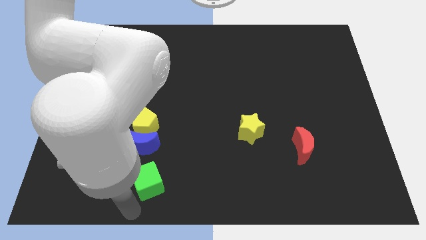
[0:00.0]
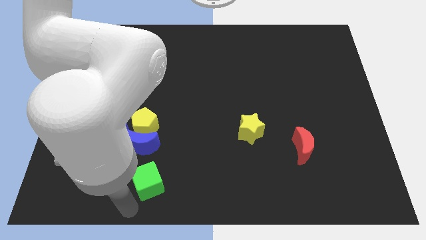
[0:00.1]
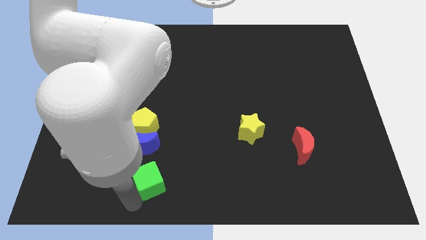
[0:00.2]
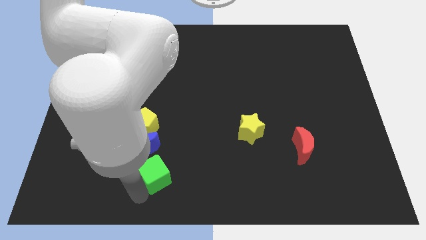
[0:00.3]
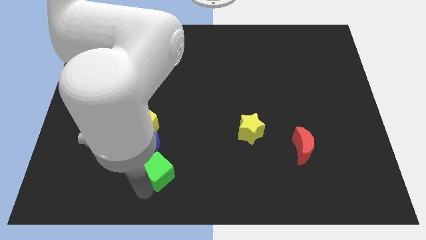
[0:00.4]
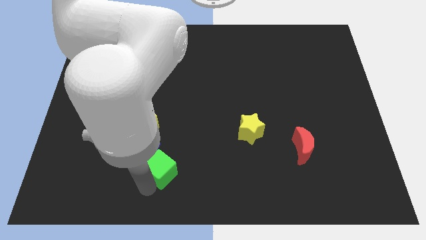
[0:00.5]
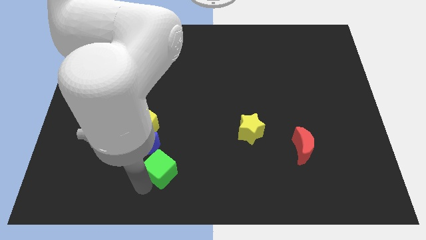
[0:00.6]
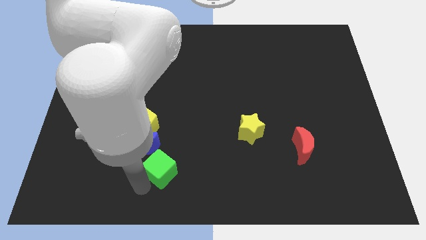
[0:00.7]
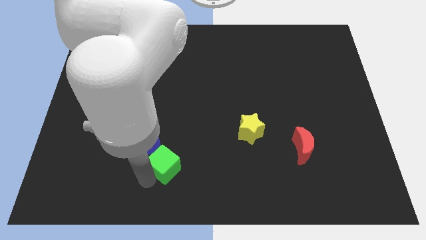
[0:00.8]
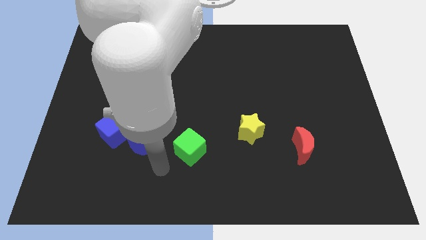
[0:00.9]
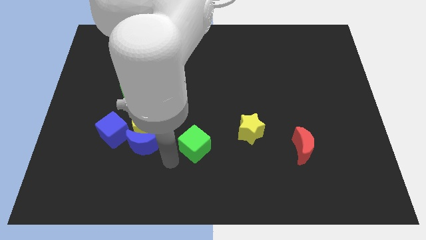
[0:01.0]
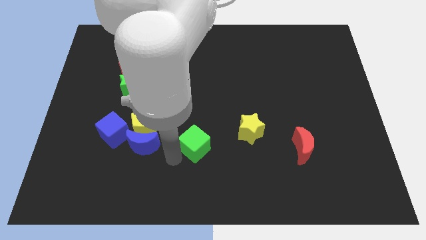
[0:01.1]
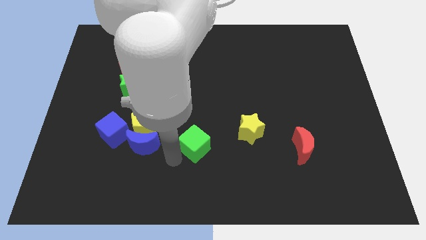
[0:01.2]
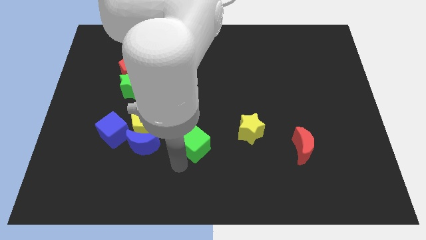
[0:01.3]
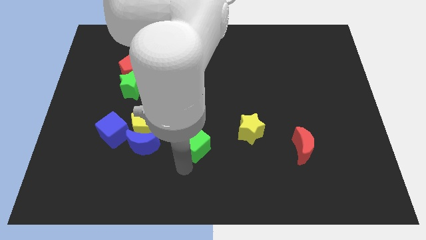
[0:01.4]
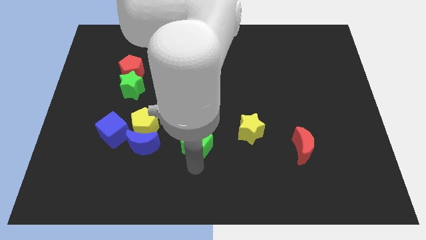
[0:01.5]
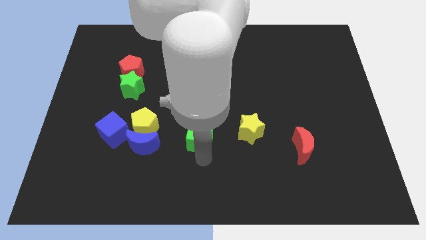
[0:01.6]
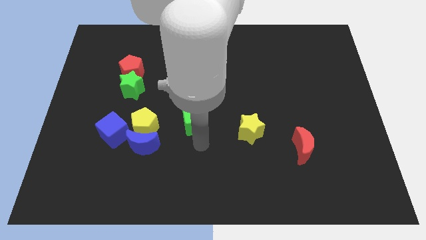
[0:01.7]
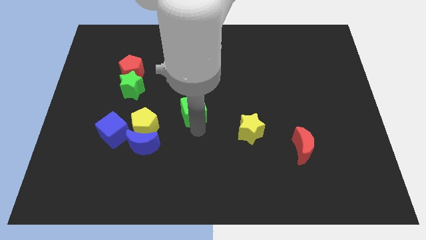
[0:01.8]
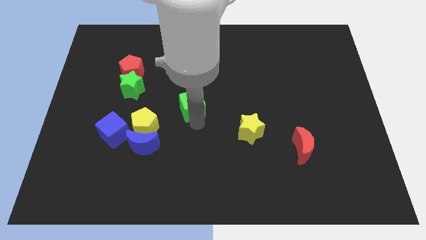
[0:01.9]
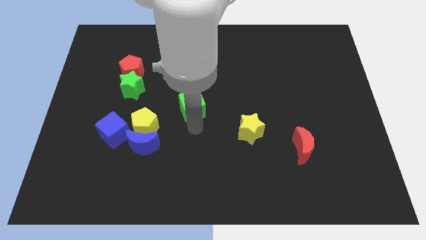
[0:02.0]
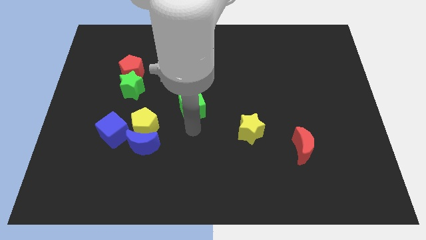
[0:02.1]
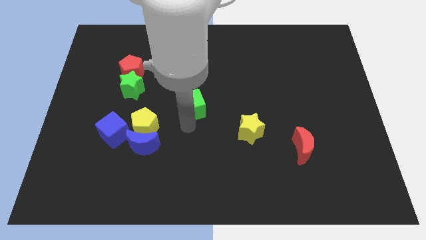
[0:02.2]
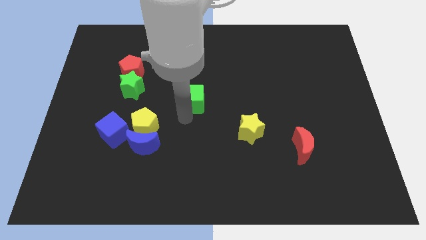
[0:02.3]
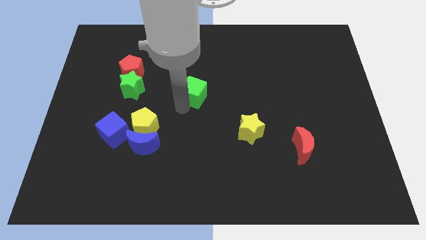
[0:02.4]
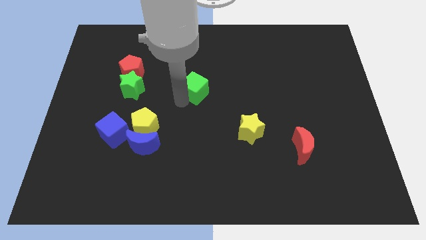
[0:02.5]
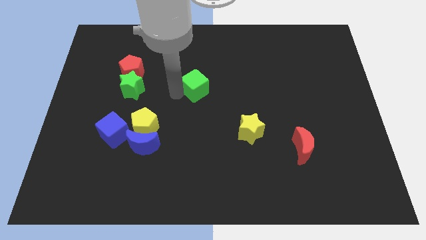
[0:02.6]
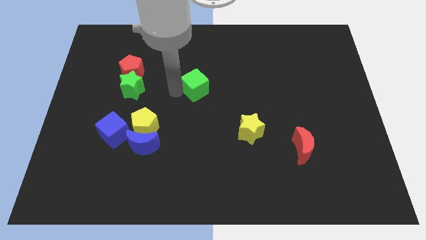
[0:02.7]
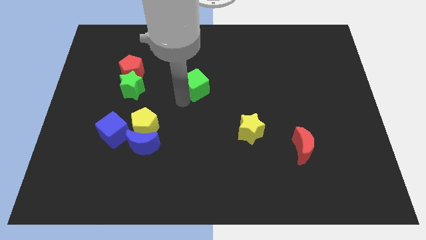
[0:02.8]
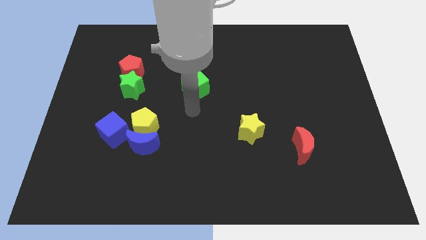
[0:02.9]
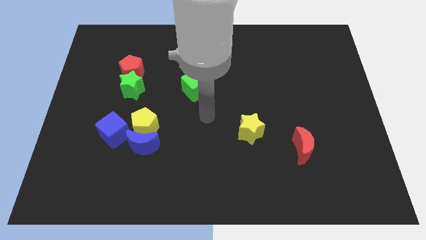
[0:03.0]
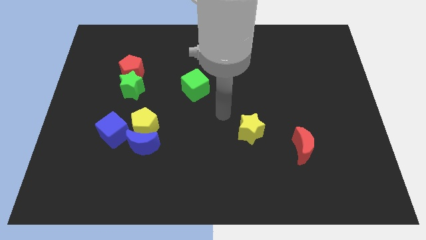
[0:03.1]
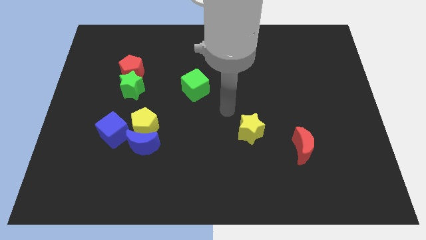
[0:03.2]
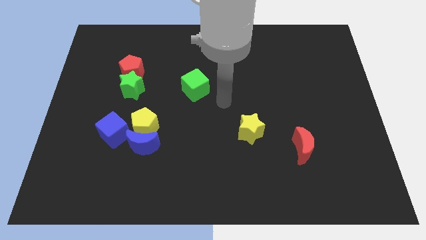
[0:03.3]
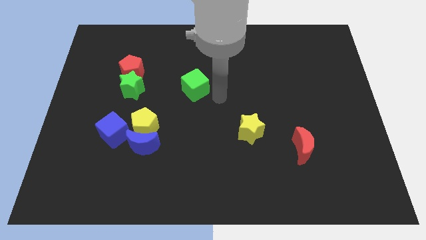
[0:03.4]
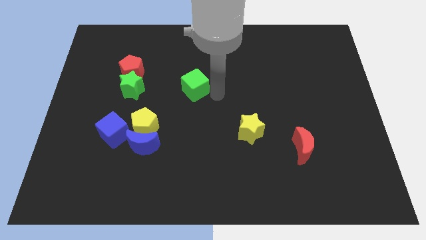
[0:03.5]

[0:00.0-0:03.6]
slide the green cube parallel to the green star

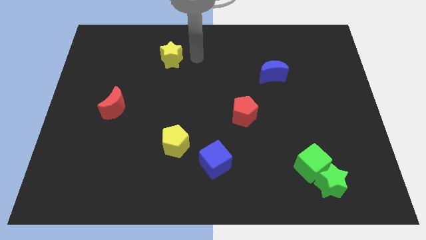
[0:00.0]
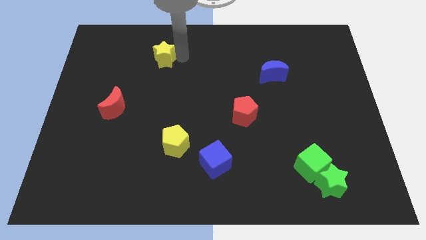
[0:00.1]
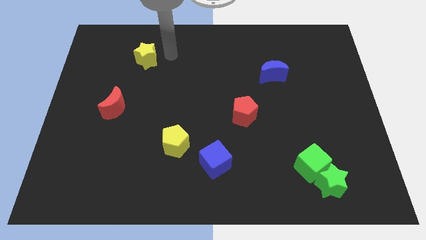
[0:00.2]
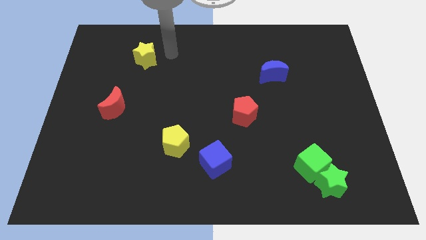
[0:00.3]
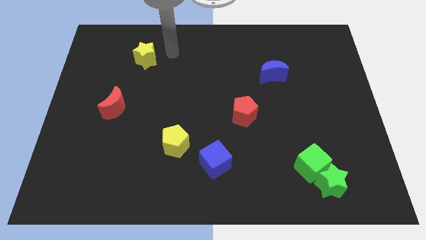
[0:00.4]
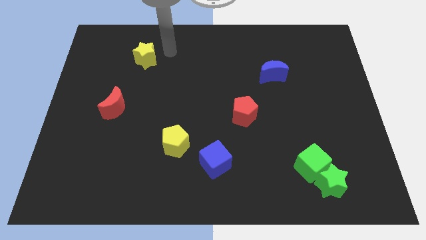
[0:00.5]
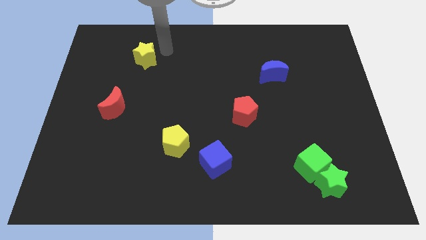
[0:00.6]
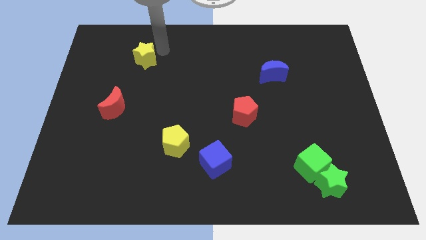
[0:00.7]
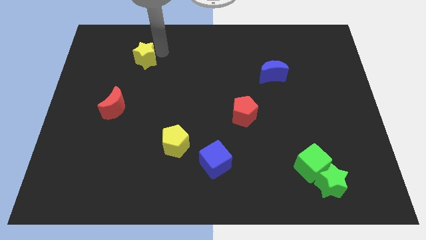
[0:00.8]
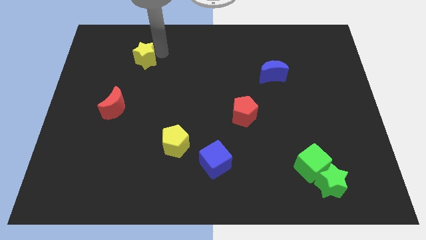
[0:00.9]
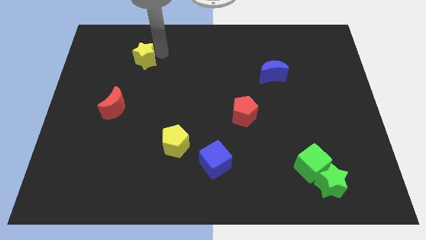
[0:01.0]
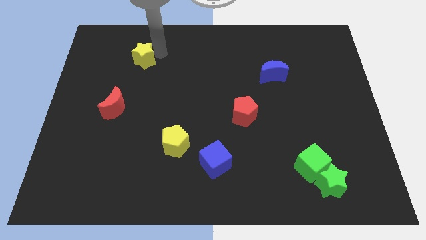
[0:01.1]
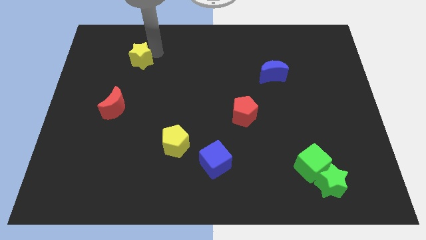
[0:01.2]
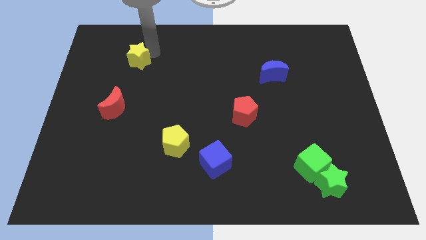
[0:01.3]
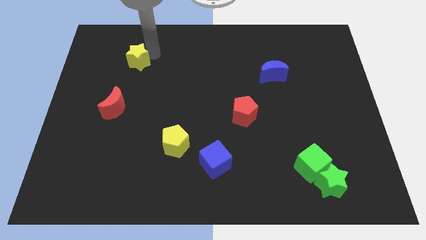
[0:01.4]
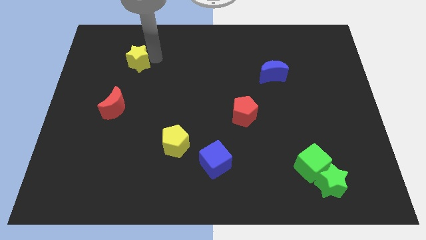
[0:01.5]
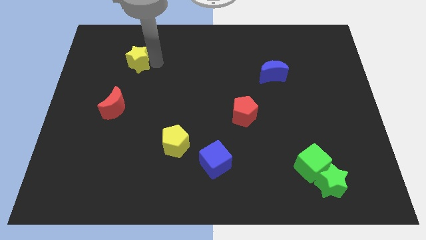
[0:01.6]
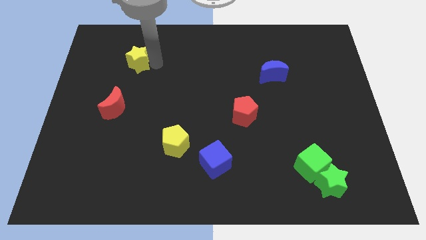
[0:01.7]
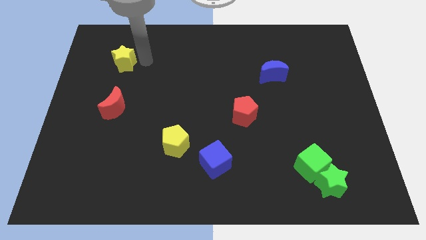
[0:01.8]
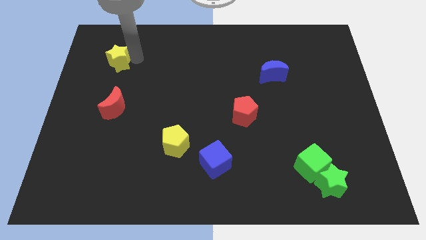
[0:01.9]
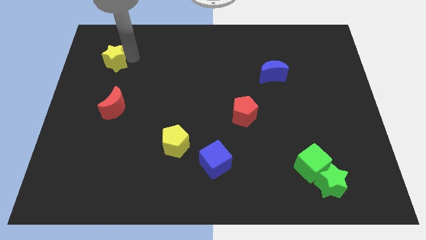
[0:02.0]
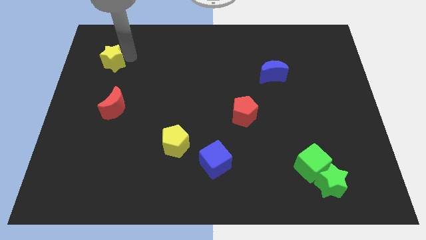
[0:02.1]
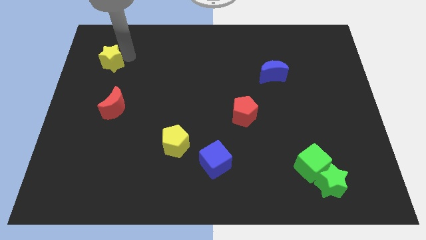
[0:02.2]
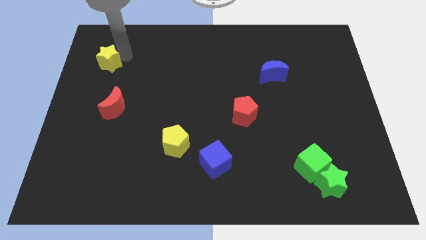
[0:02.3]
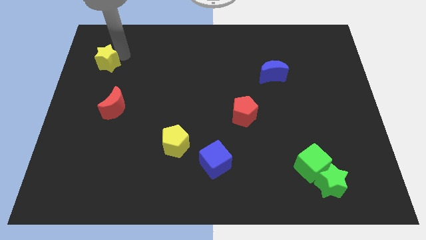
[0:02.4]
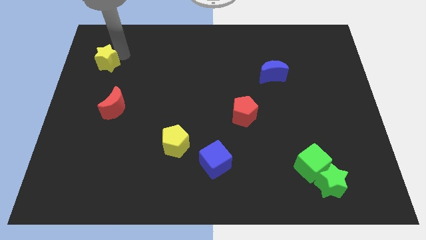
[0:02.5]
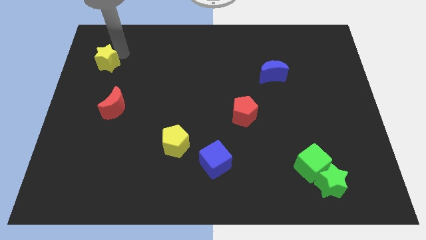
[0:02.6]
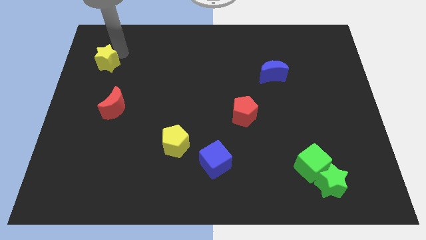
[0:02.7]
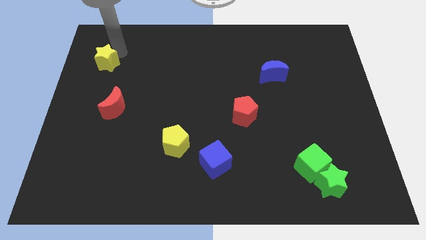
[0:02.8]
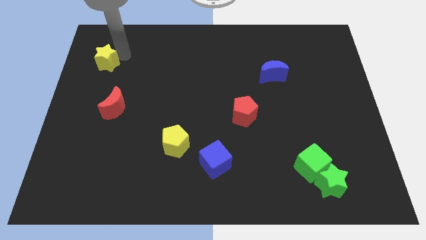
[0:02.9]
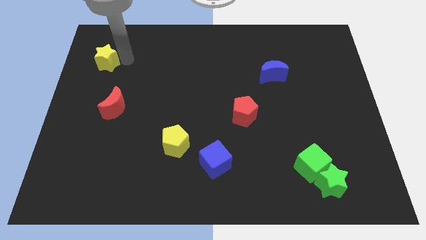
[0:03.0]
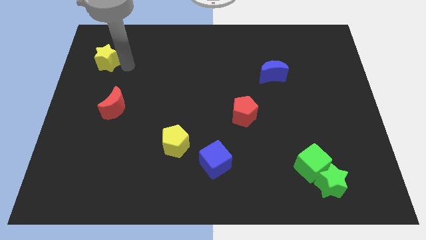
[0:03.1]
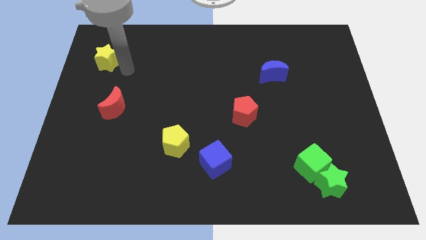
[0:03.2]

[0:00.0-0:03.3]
place the yellow star at the top side of the red moon

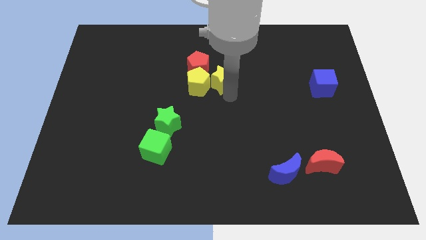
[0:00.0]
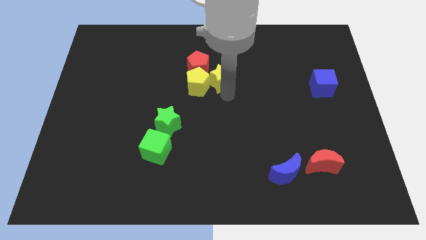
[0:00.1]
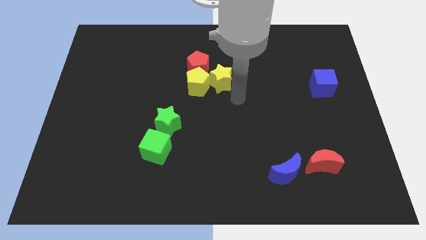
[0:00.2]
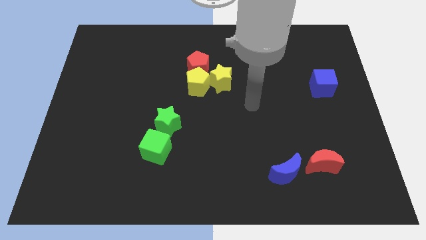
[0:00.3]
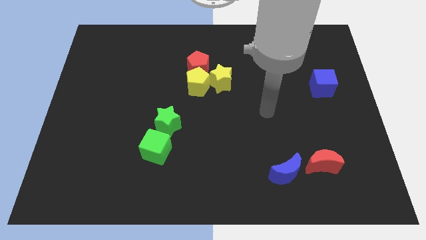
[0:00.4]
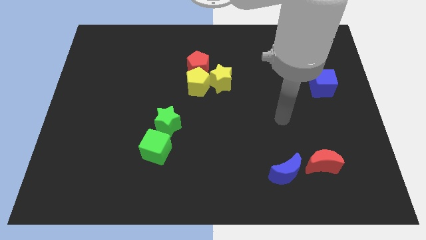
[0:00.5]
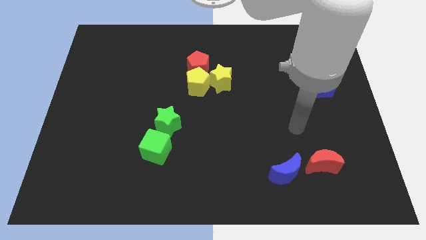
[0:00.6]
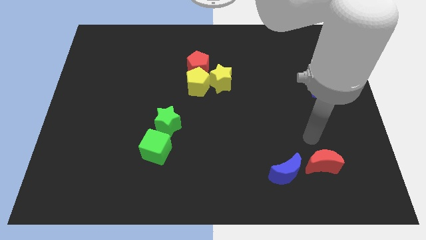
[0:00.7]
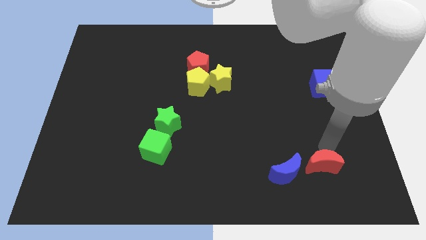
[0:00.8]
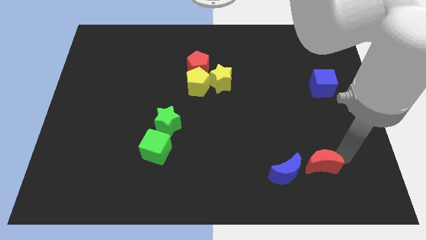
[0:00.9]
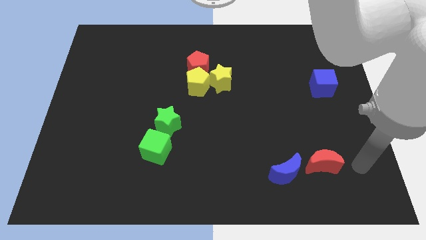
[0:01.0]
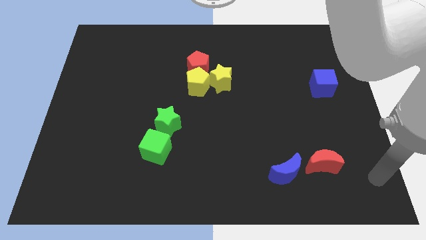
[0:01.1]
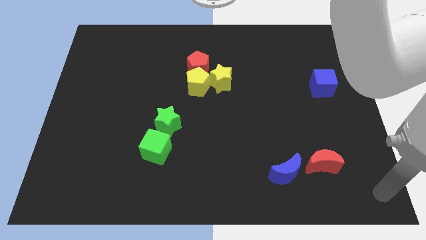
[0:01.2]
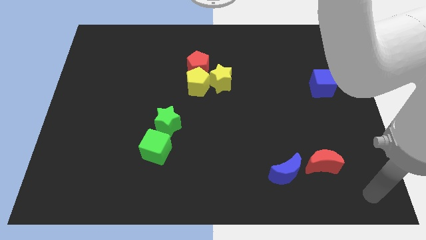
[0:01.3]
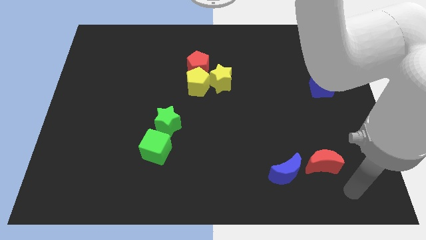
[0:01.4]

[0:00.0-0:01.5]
move the arm away from the yellow star

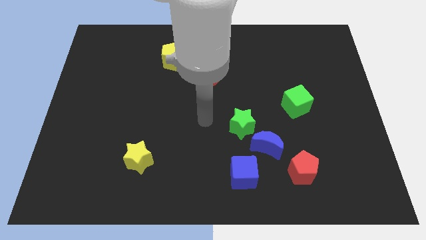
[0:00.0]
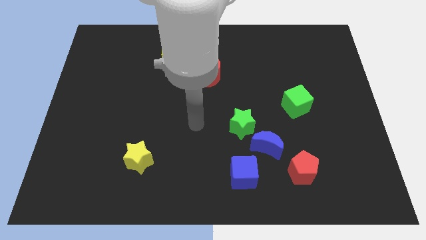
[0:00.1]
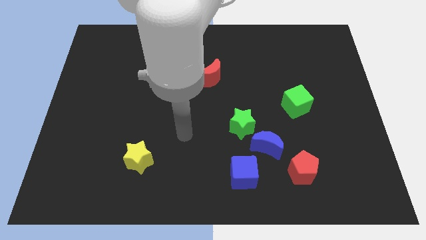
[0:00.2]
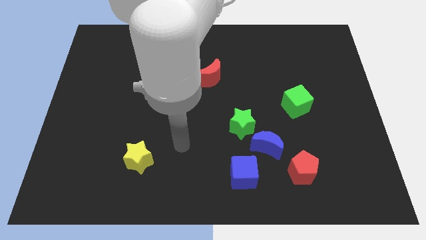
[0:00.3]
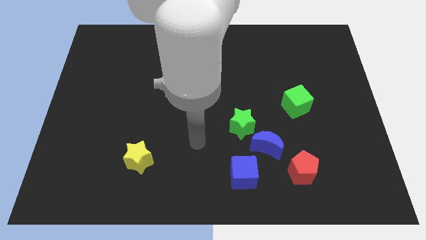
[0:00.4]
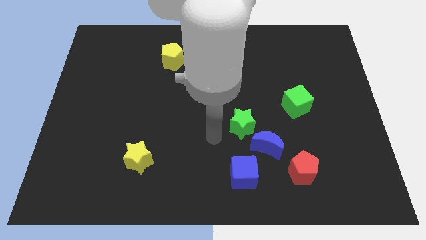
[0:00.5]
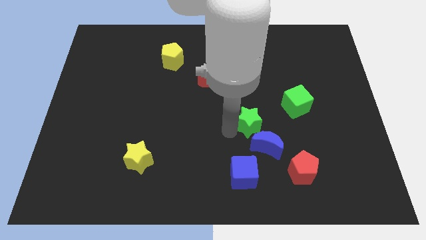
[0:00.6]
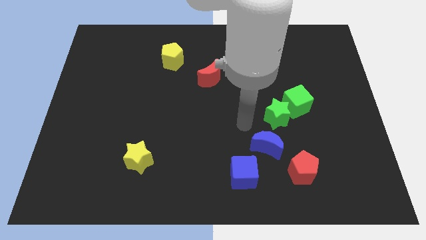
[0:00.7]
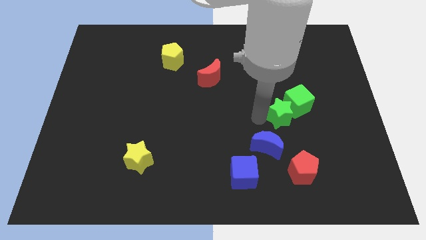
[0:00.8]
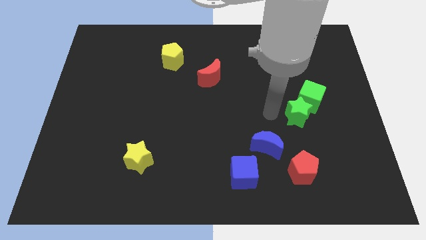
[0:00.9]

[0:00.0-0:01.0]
push green star in to green cube
